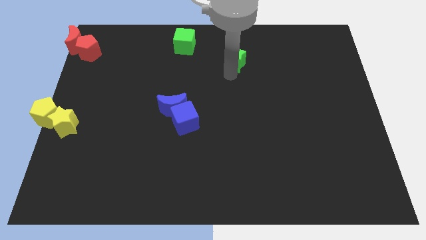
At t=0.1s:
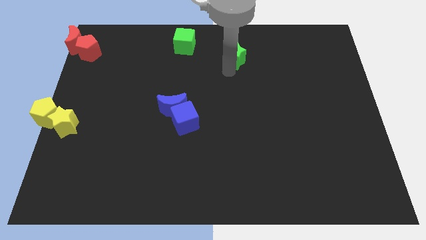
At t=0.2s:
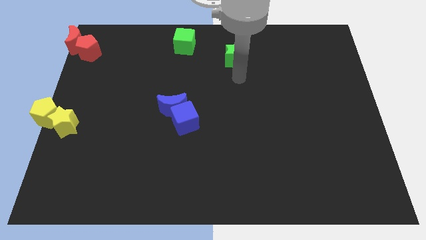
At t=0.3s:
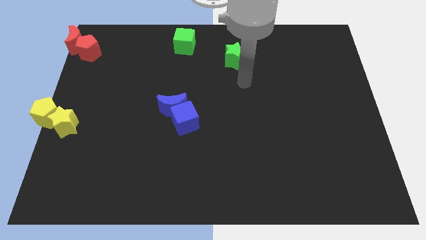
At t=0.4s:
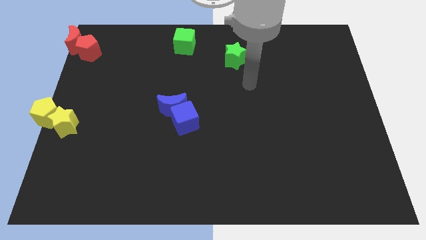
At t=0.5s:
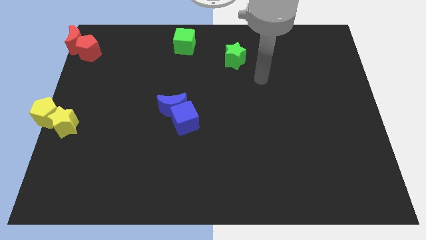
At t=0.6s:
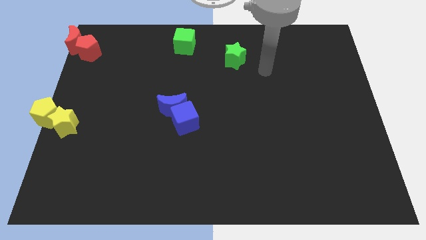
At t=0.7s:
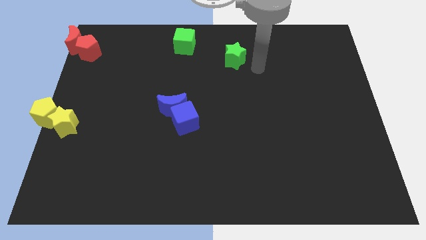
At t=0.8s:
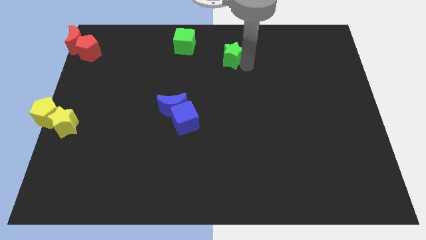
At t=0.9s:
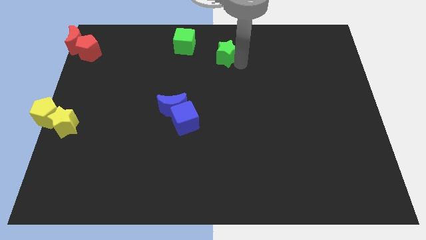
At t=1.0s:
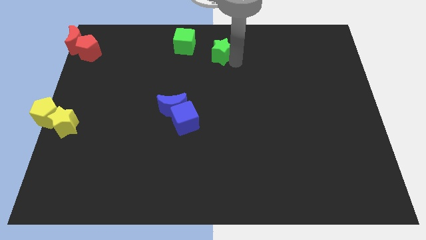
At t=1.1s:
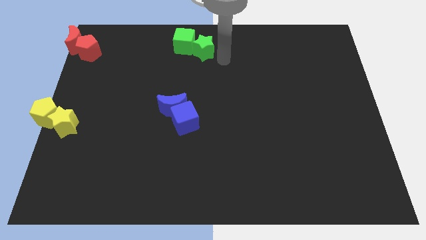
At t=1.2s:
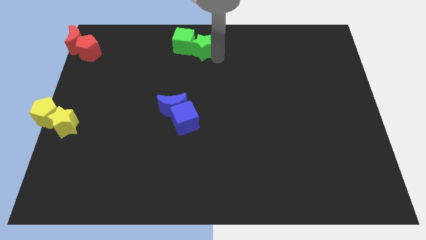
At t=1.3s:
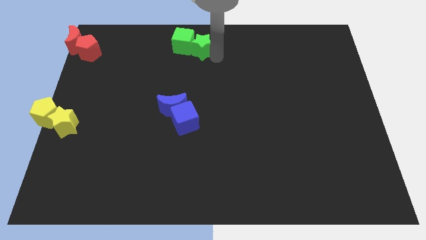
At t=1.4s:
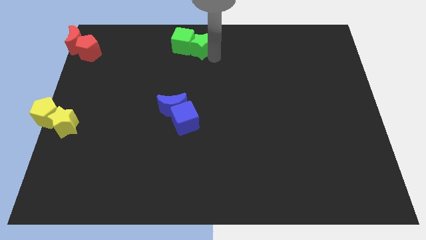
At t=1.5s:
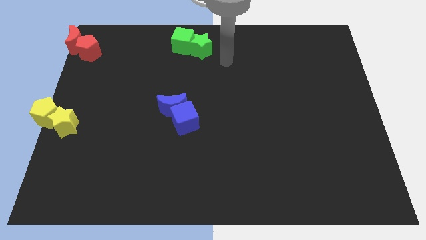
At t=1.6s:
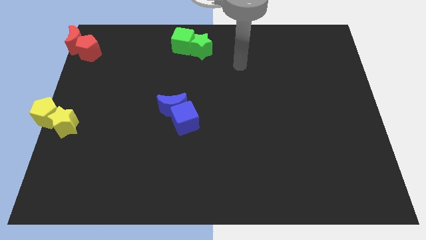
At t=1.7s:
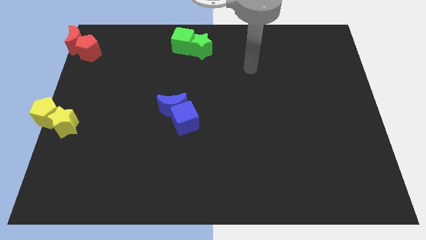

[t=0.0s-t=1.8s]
slide the green star to the top center

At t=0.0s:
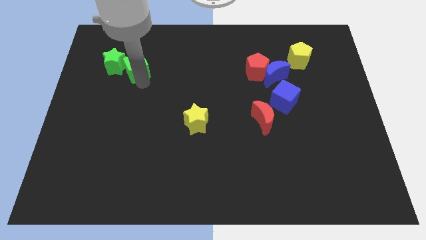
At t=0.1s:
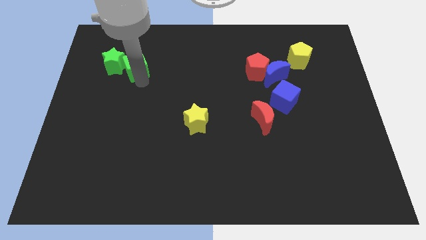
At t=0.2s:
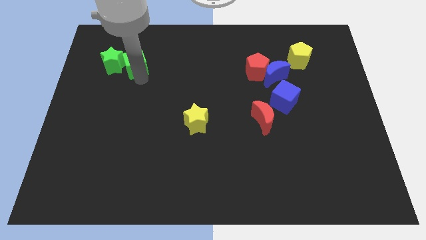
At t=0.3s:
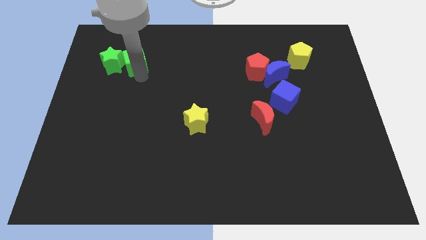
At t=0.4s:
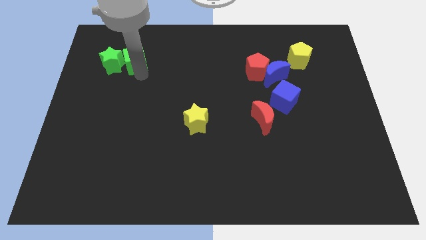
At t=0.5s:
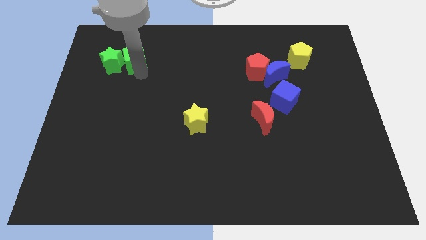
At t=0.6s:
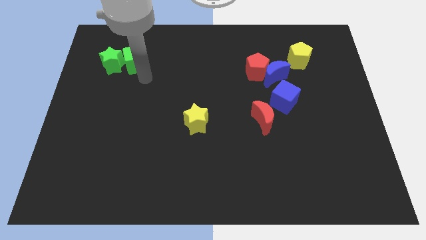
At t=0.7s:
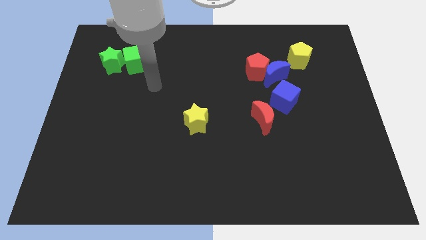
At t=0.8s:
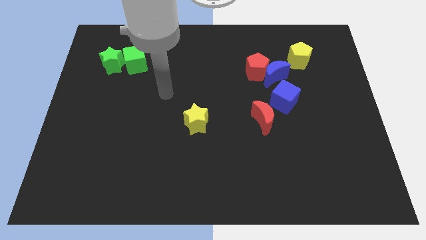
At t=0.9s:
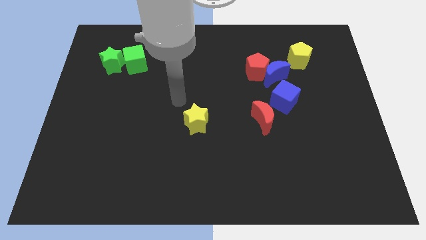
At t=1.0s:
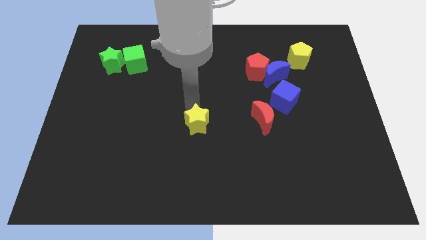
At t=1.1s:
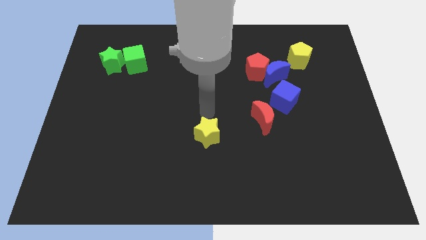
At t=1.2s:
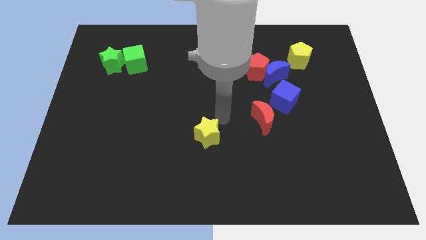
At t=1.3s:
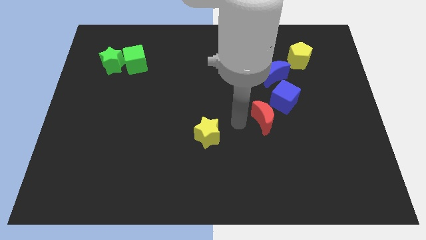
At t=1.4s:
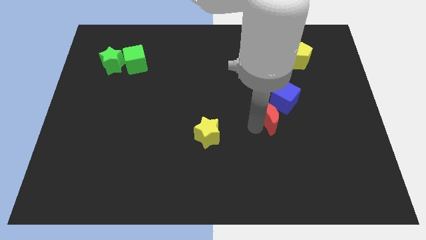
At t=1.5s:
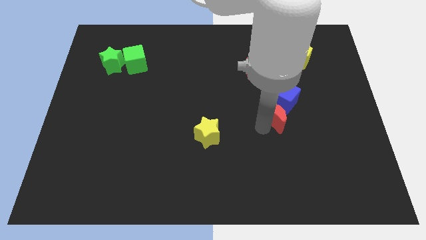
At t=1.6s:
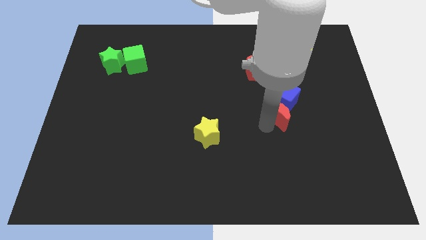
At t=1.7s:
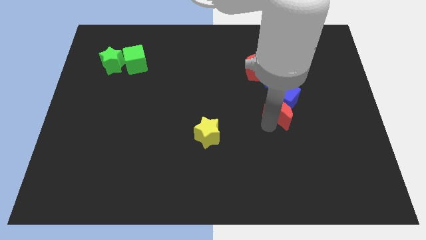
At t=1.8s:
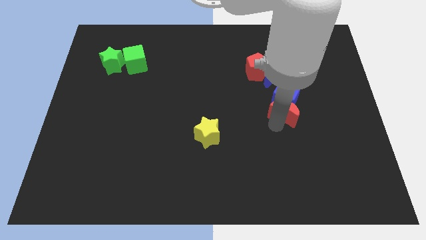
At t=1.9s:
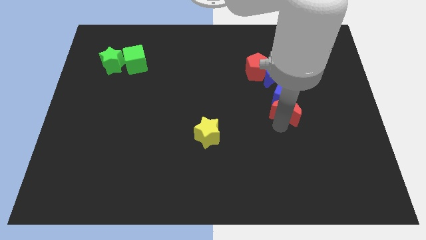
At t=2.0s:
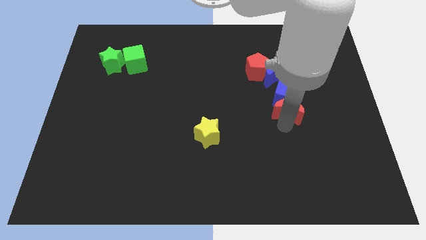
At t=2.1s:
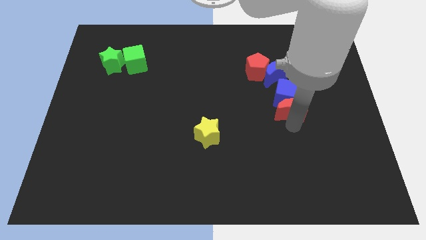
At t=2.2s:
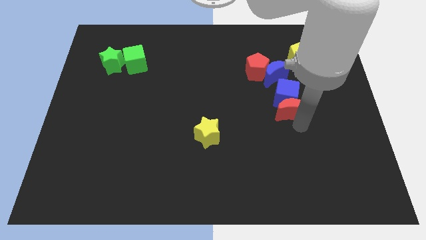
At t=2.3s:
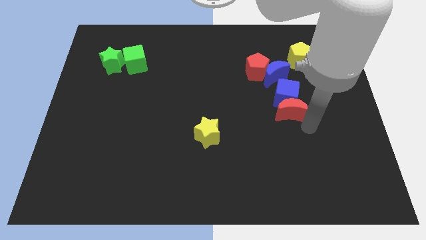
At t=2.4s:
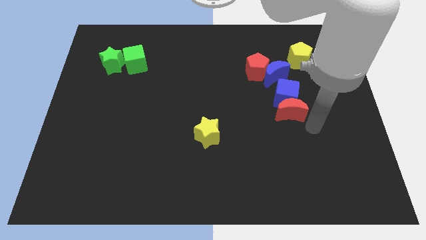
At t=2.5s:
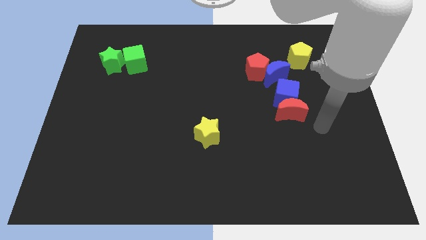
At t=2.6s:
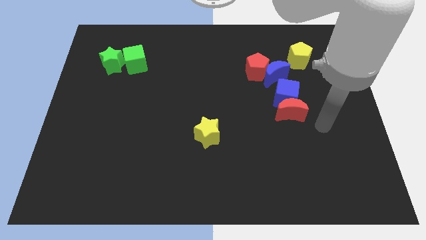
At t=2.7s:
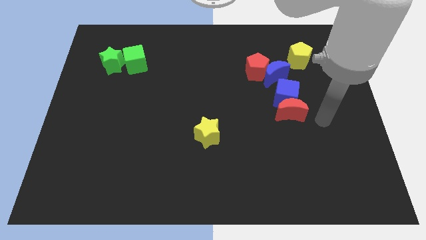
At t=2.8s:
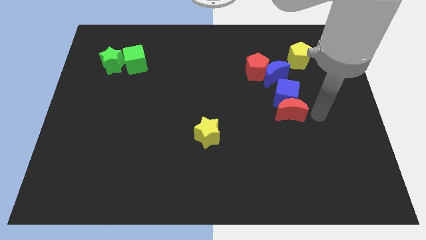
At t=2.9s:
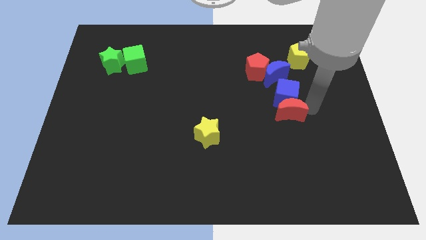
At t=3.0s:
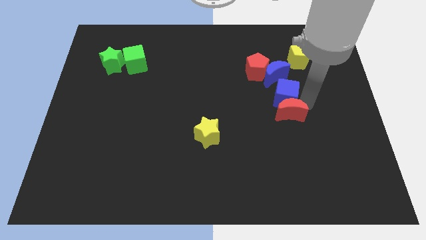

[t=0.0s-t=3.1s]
push red moon into blue cube

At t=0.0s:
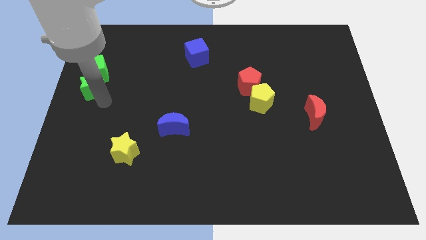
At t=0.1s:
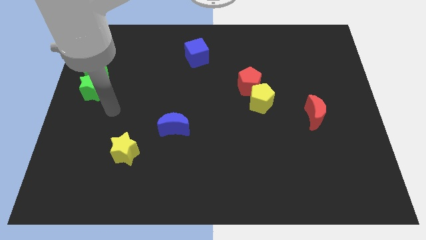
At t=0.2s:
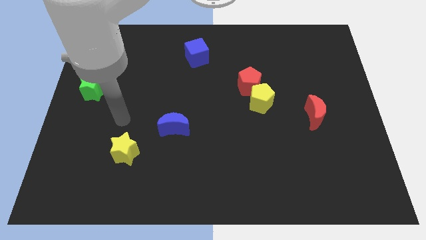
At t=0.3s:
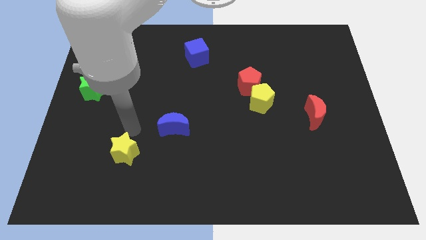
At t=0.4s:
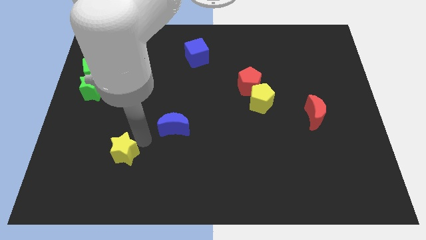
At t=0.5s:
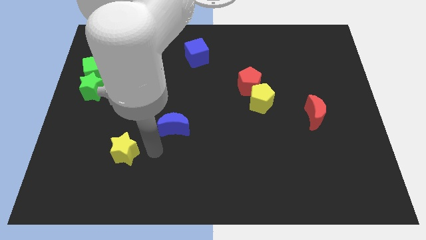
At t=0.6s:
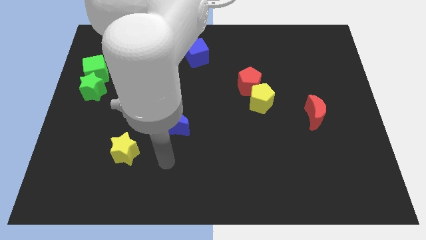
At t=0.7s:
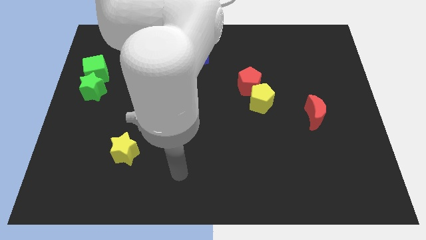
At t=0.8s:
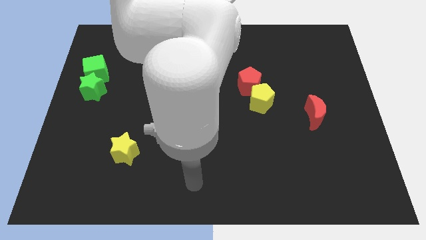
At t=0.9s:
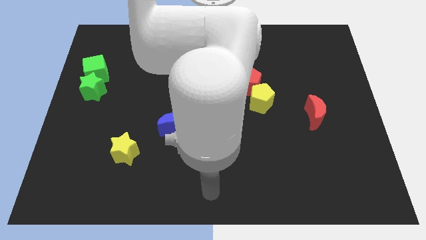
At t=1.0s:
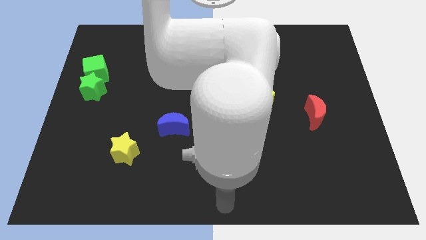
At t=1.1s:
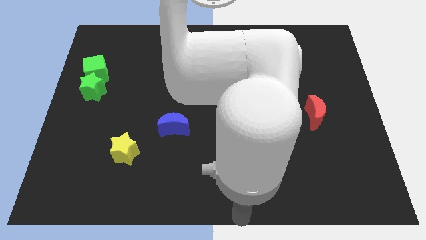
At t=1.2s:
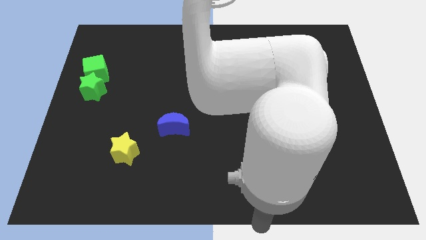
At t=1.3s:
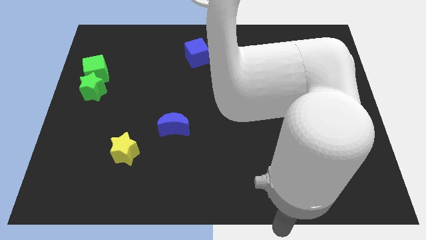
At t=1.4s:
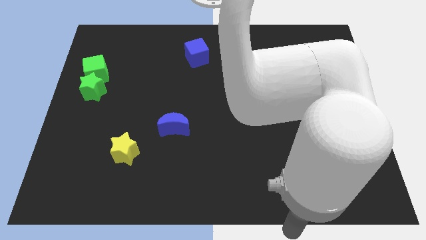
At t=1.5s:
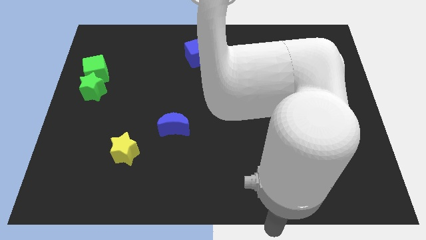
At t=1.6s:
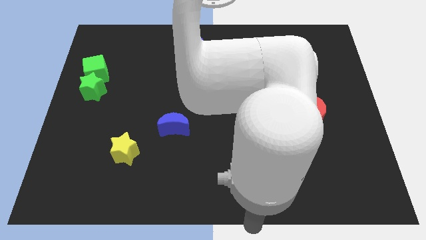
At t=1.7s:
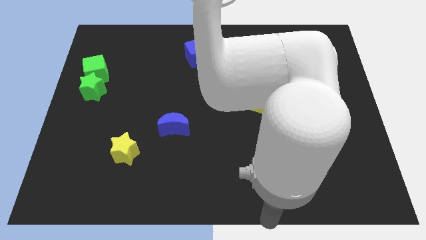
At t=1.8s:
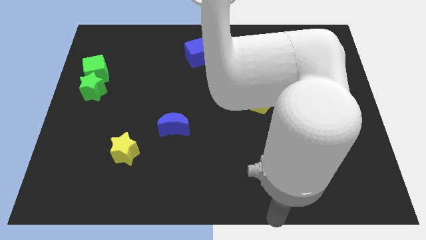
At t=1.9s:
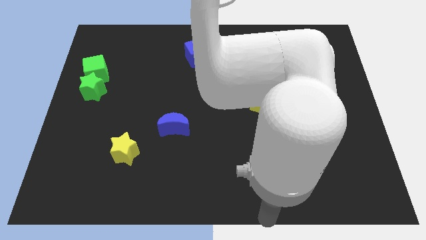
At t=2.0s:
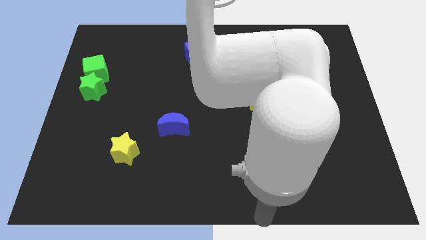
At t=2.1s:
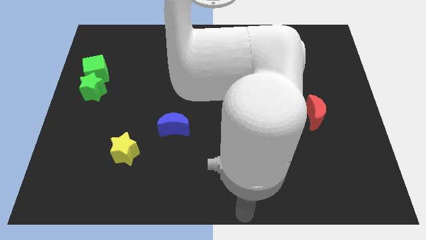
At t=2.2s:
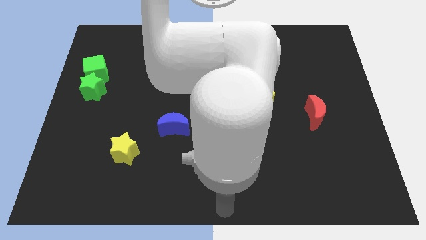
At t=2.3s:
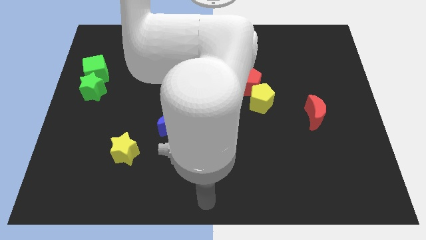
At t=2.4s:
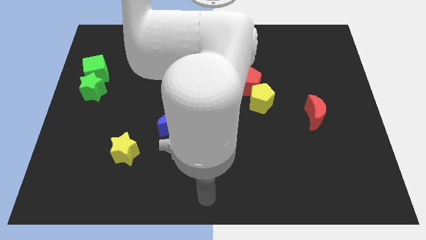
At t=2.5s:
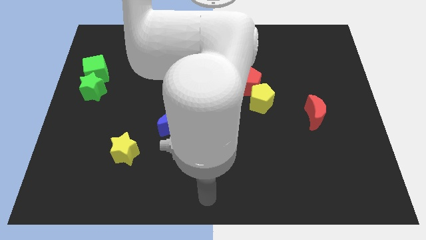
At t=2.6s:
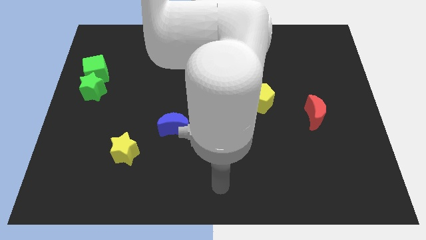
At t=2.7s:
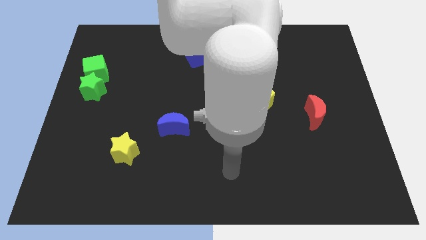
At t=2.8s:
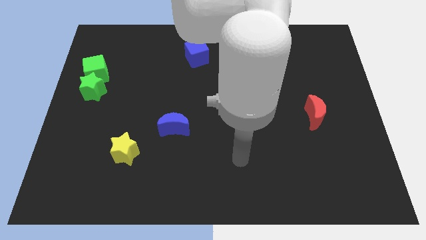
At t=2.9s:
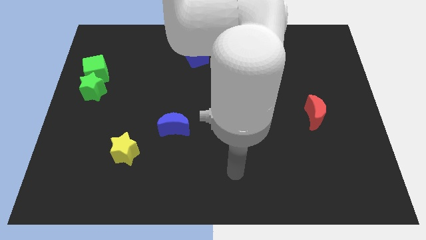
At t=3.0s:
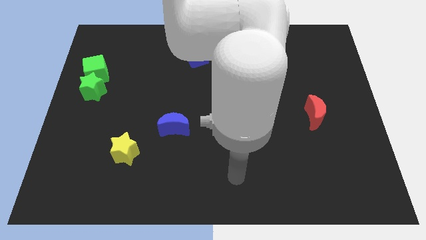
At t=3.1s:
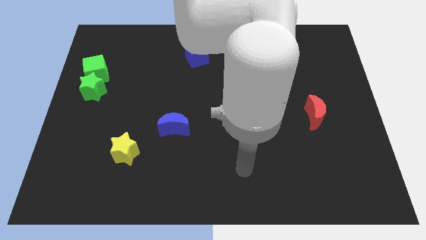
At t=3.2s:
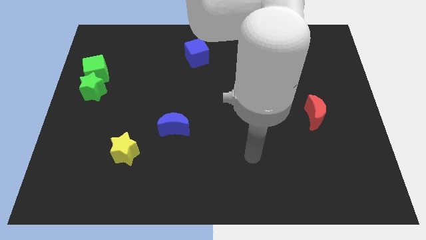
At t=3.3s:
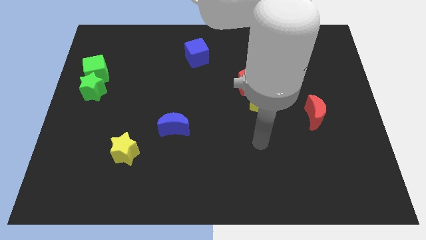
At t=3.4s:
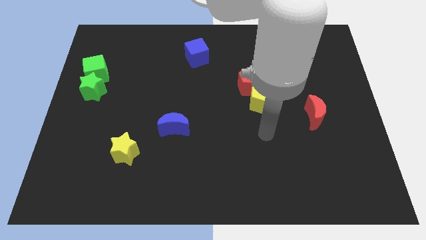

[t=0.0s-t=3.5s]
point your arm at the bottom of the yellow pentagon

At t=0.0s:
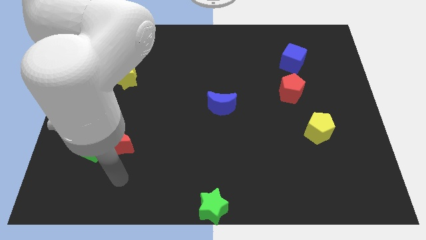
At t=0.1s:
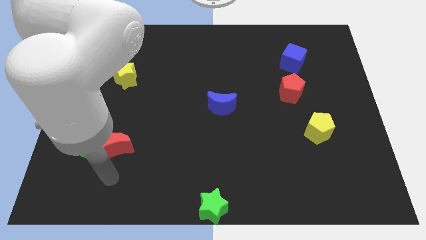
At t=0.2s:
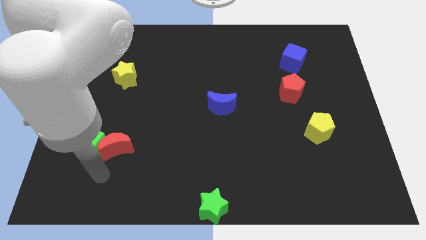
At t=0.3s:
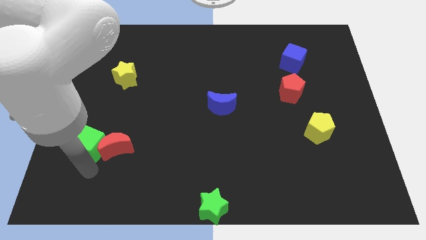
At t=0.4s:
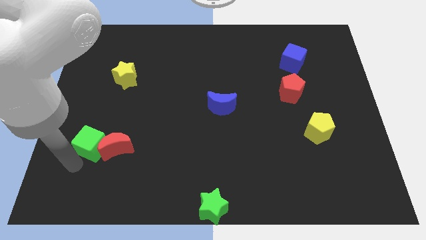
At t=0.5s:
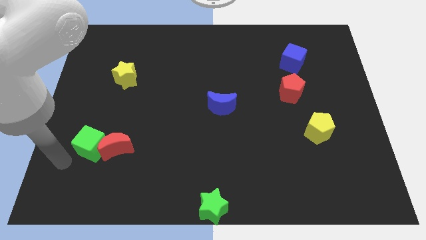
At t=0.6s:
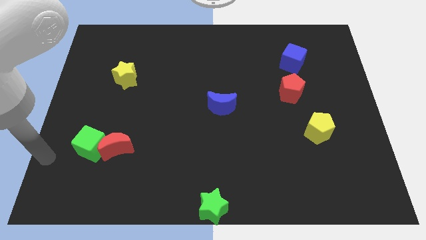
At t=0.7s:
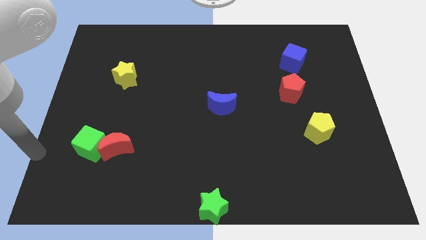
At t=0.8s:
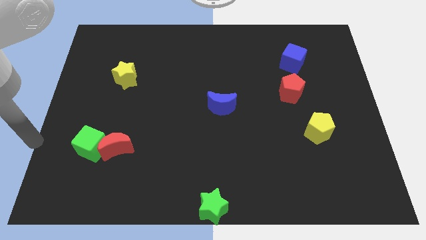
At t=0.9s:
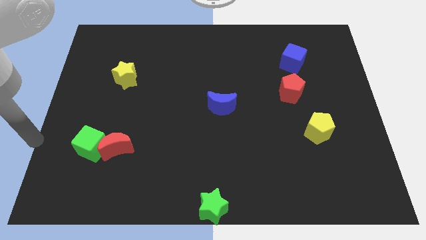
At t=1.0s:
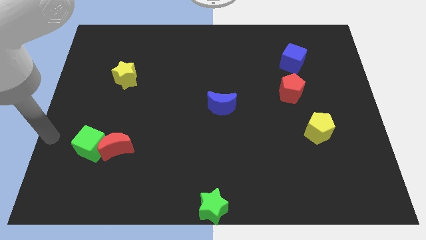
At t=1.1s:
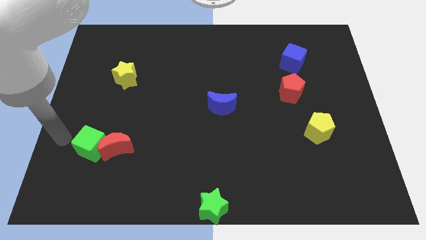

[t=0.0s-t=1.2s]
point your arm to the left side of green cube
